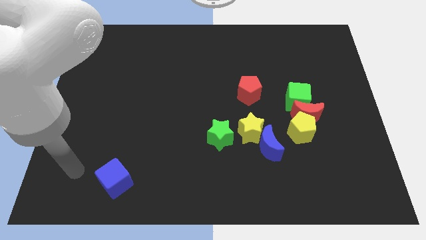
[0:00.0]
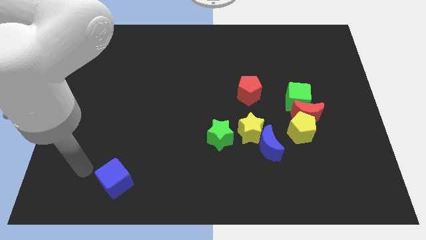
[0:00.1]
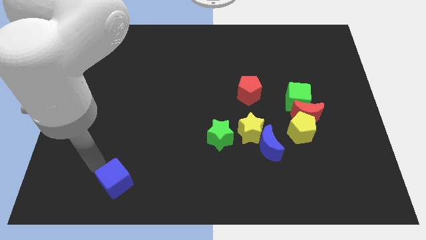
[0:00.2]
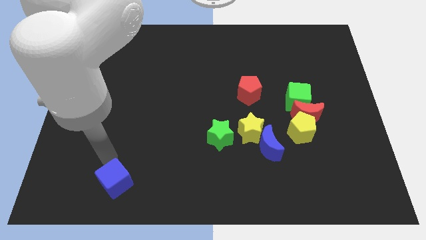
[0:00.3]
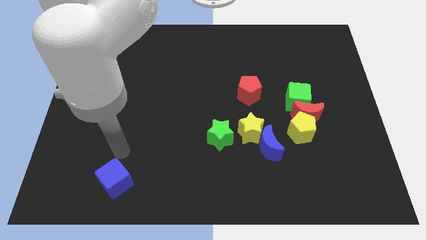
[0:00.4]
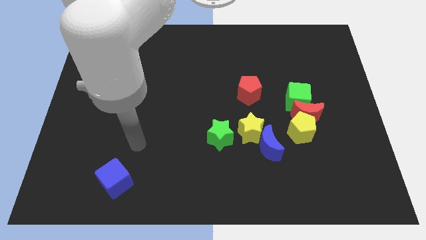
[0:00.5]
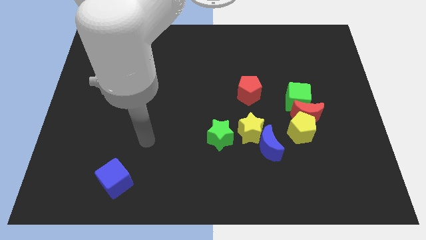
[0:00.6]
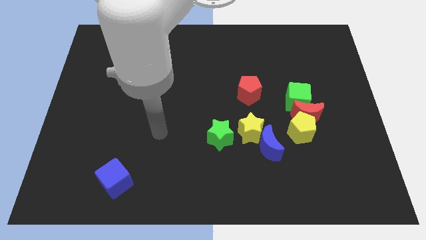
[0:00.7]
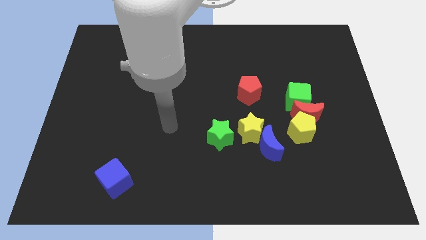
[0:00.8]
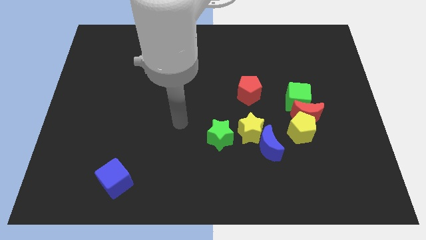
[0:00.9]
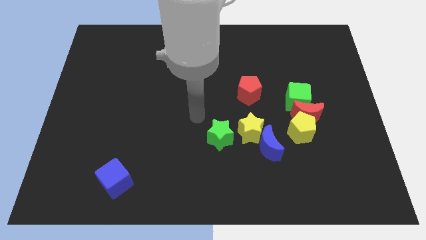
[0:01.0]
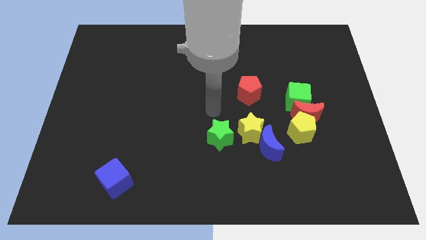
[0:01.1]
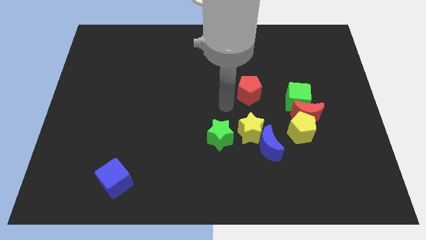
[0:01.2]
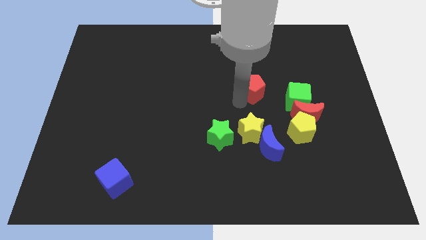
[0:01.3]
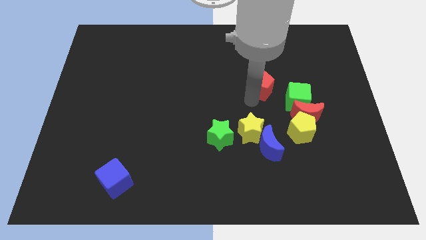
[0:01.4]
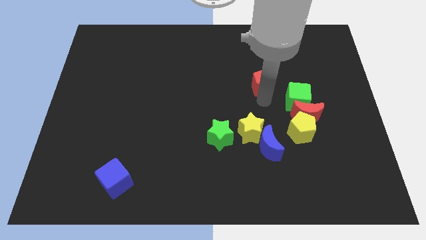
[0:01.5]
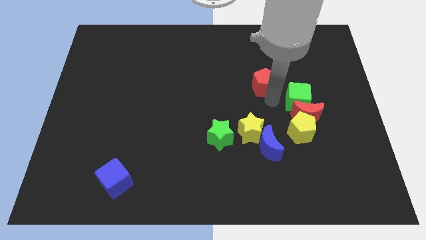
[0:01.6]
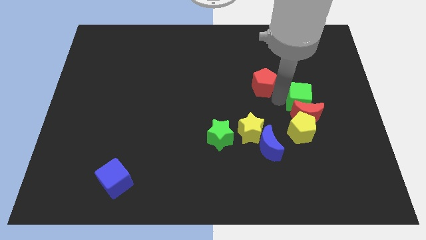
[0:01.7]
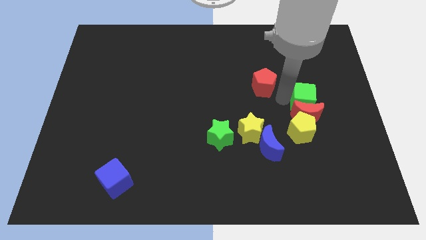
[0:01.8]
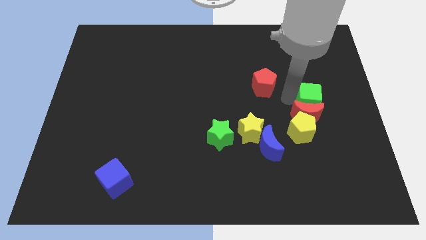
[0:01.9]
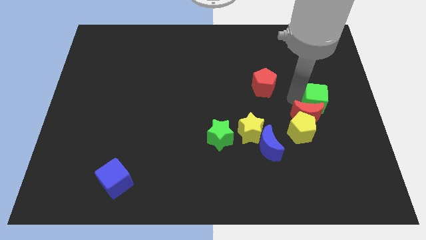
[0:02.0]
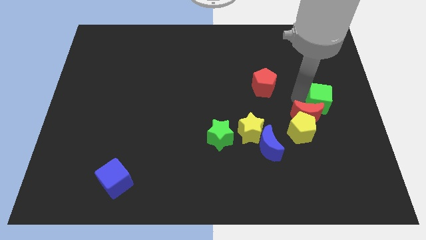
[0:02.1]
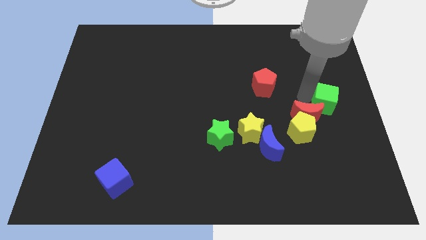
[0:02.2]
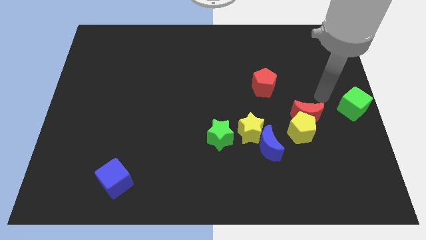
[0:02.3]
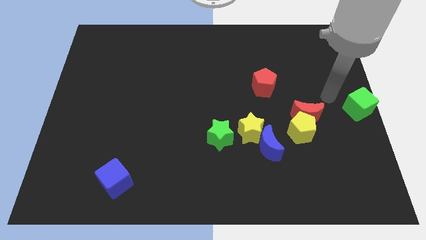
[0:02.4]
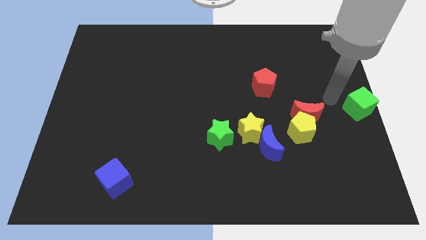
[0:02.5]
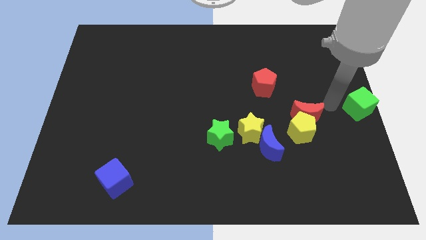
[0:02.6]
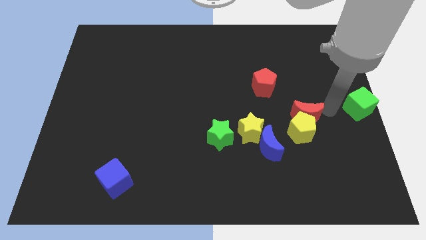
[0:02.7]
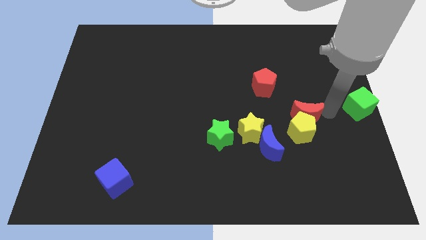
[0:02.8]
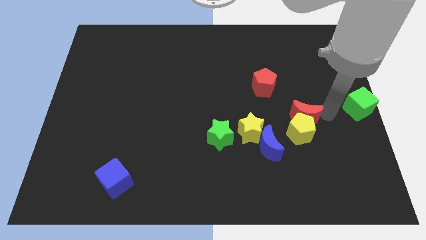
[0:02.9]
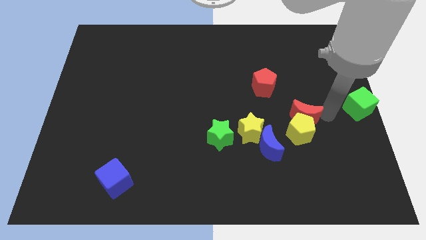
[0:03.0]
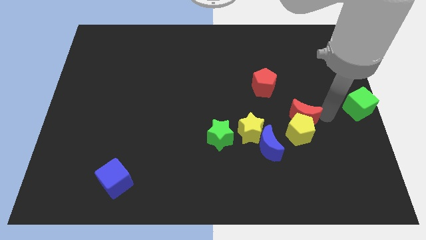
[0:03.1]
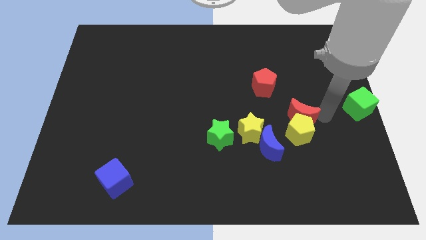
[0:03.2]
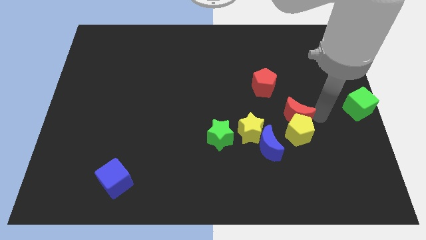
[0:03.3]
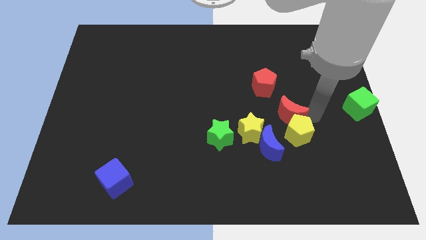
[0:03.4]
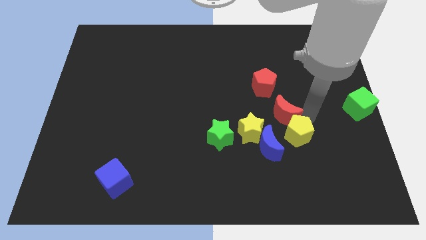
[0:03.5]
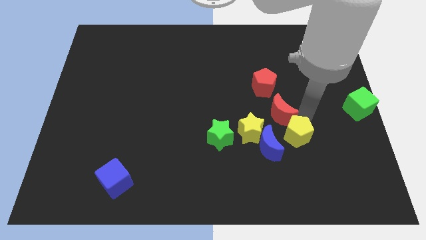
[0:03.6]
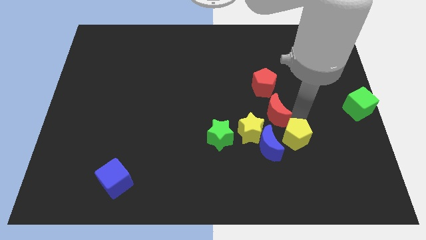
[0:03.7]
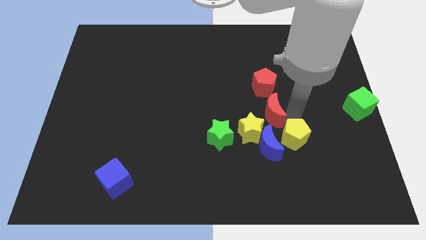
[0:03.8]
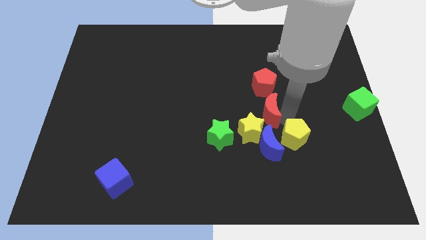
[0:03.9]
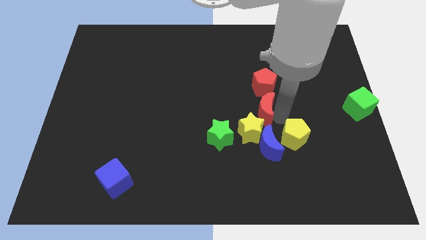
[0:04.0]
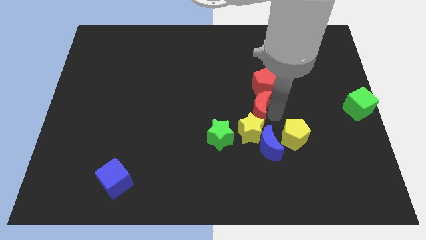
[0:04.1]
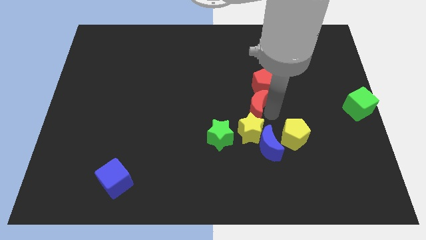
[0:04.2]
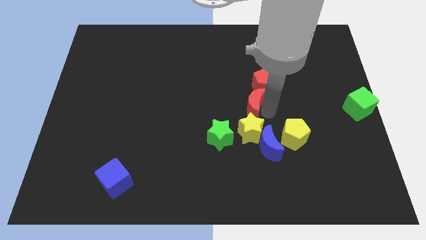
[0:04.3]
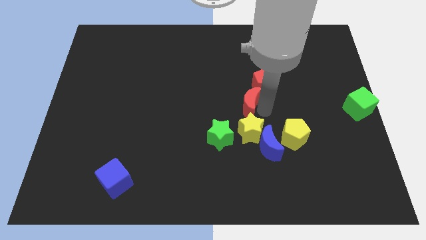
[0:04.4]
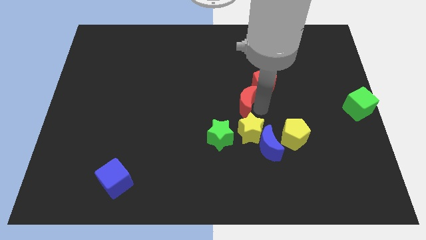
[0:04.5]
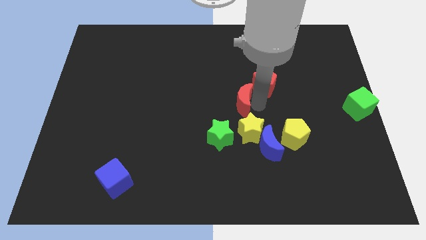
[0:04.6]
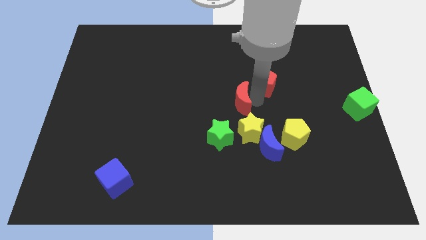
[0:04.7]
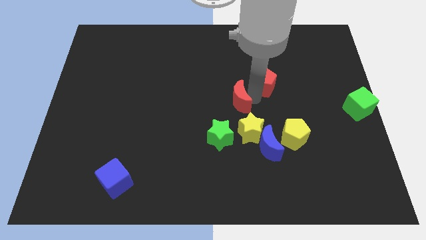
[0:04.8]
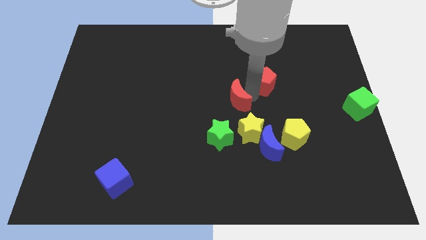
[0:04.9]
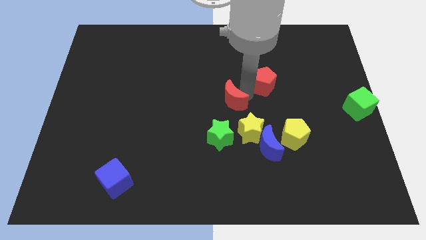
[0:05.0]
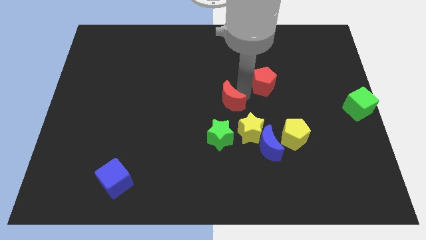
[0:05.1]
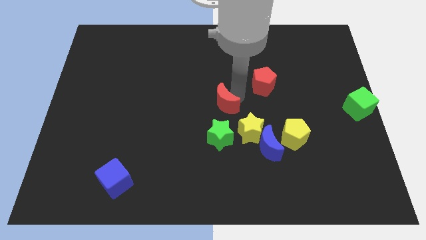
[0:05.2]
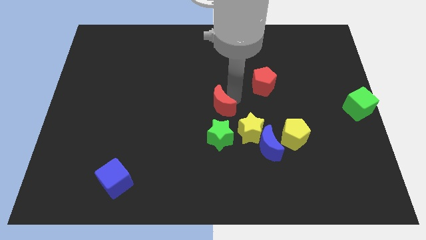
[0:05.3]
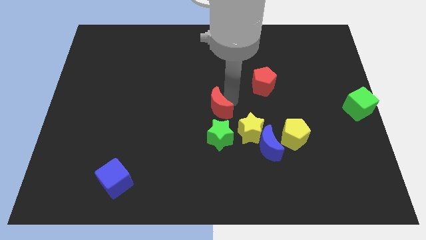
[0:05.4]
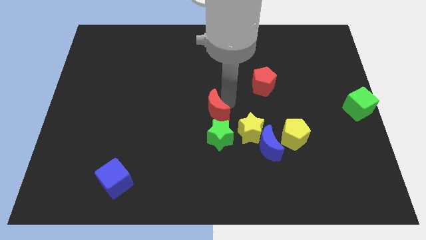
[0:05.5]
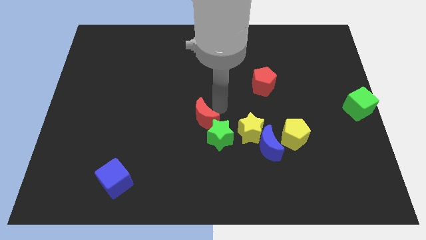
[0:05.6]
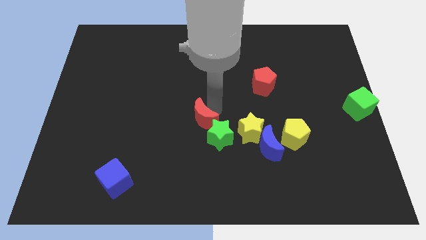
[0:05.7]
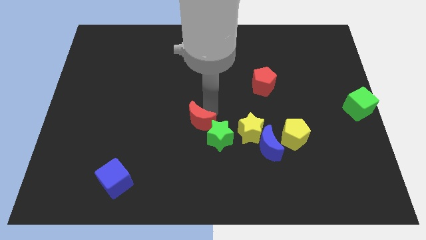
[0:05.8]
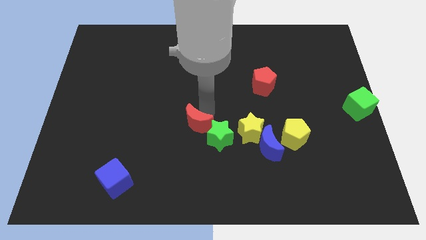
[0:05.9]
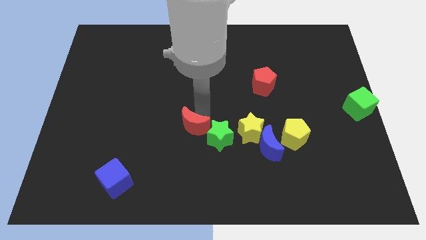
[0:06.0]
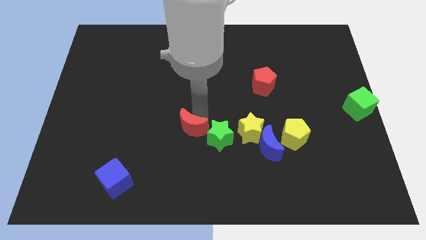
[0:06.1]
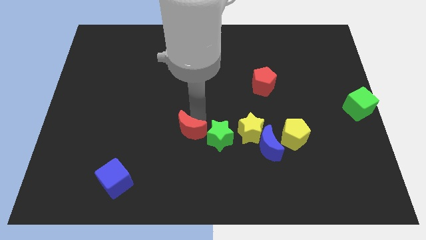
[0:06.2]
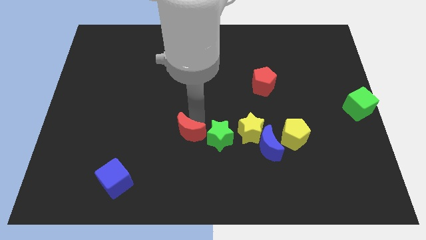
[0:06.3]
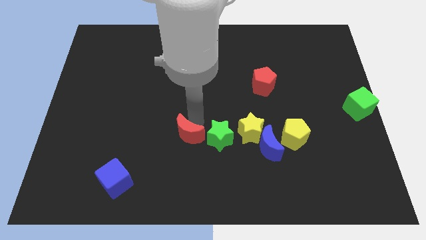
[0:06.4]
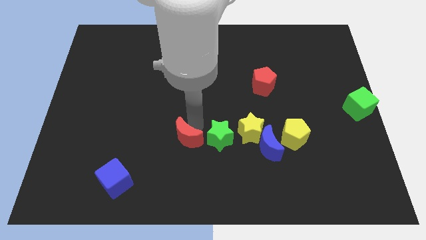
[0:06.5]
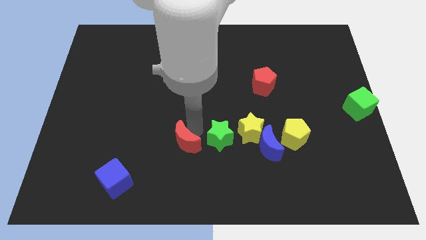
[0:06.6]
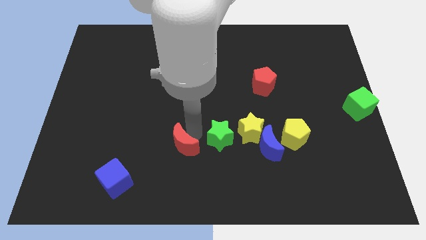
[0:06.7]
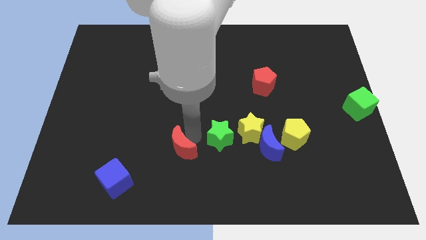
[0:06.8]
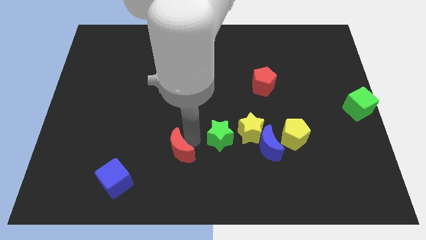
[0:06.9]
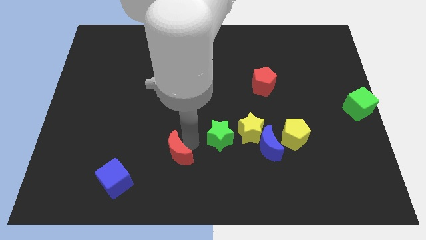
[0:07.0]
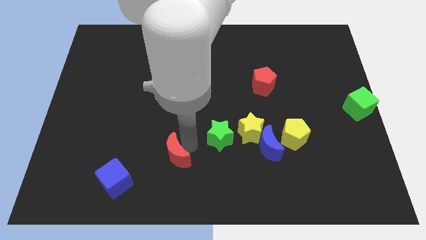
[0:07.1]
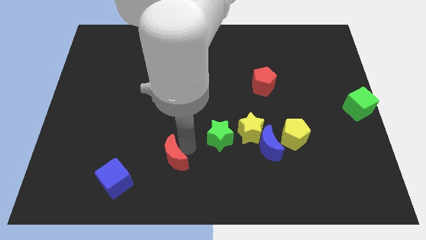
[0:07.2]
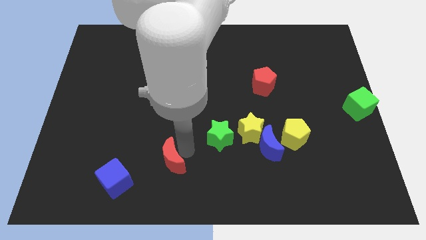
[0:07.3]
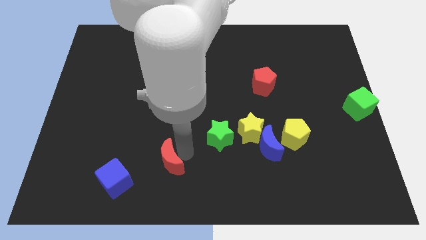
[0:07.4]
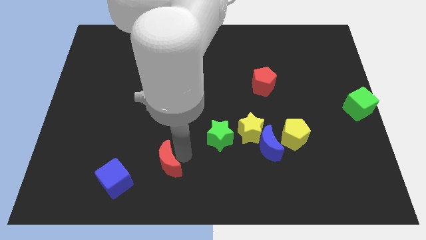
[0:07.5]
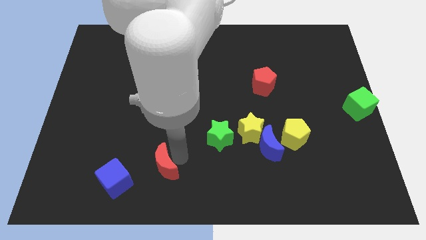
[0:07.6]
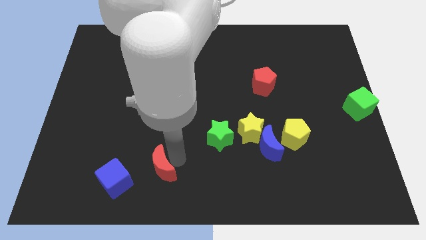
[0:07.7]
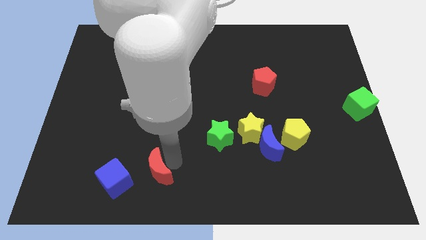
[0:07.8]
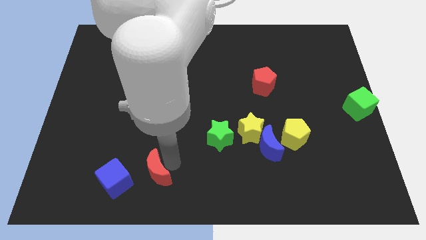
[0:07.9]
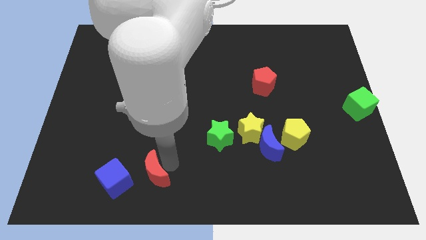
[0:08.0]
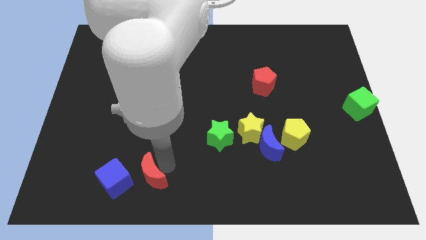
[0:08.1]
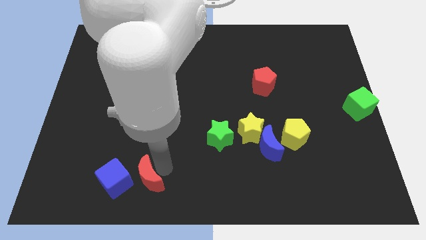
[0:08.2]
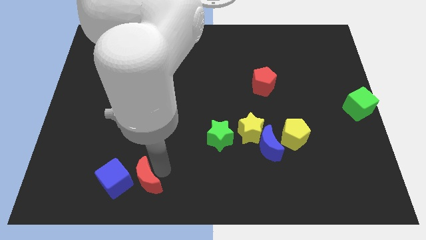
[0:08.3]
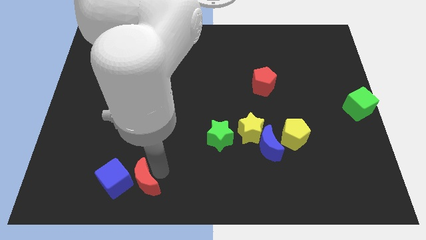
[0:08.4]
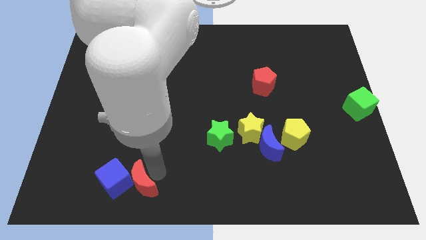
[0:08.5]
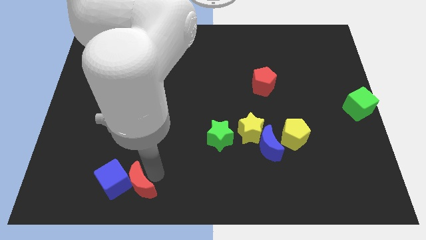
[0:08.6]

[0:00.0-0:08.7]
push the red moon towards the blue cube
